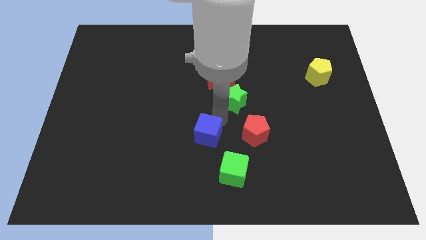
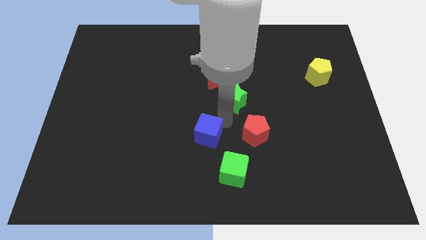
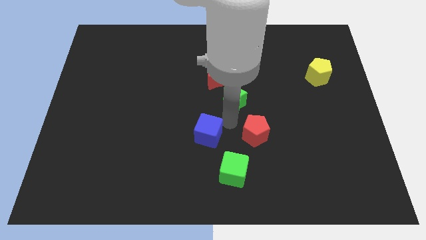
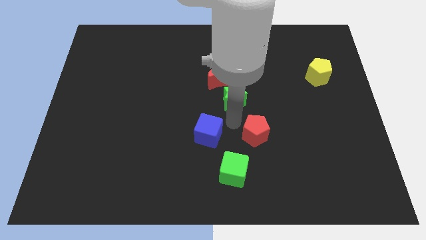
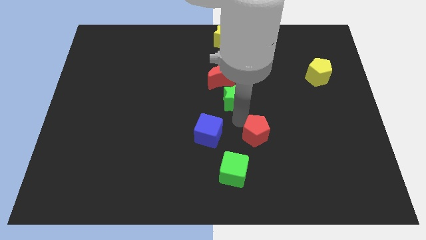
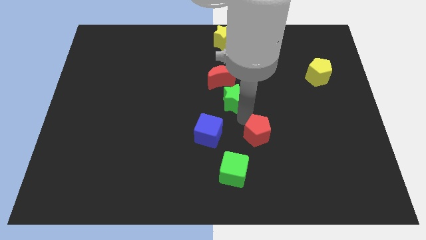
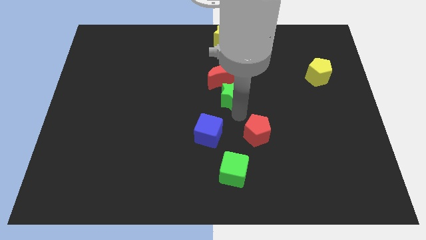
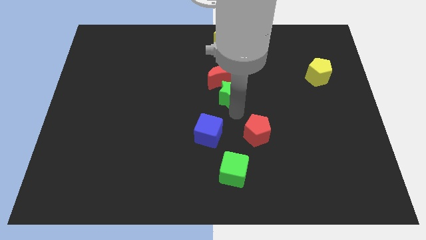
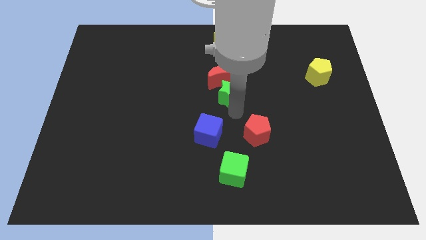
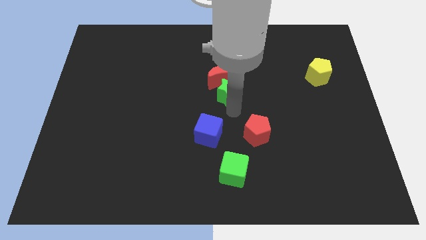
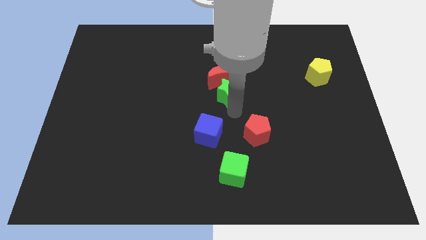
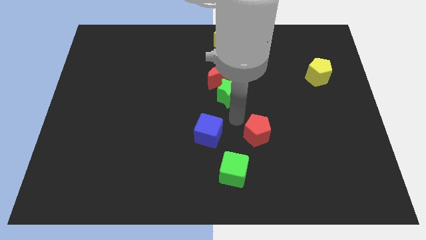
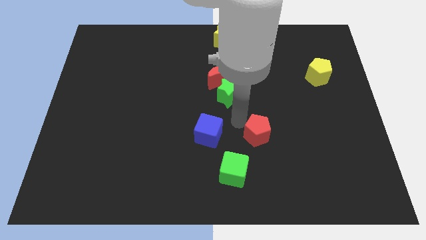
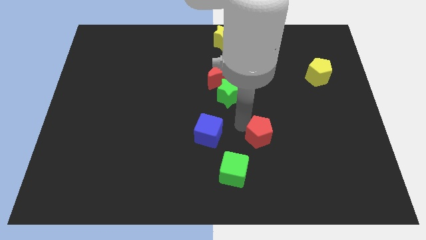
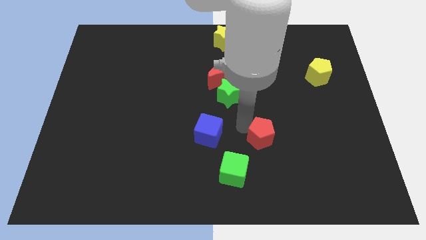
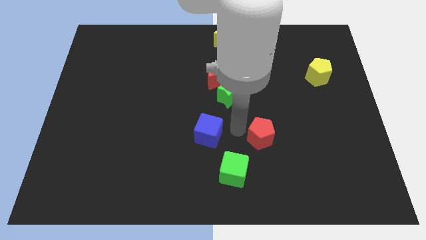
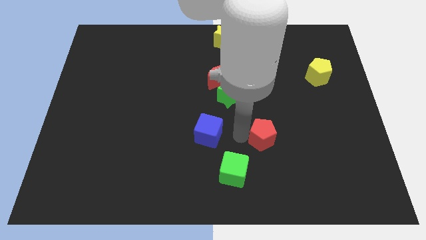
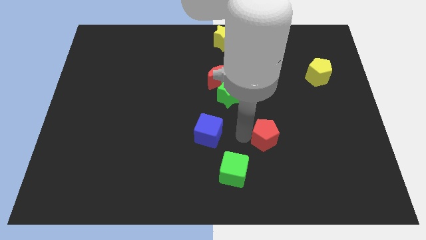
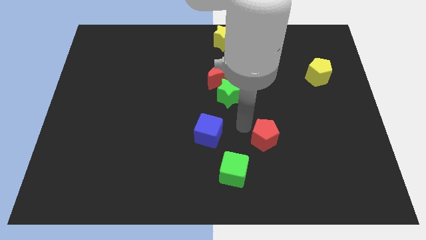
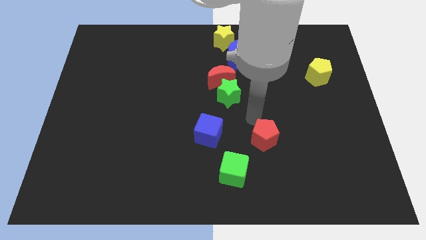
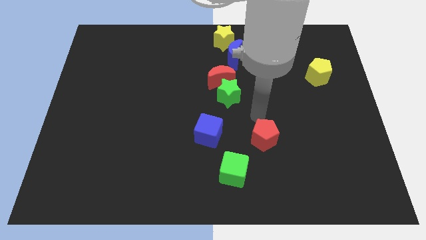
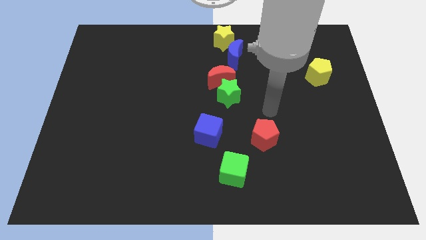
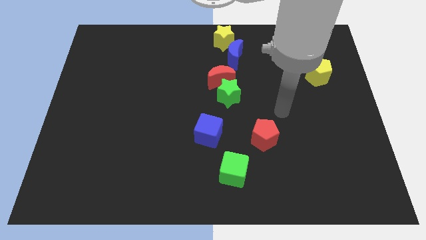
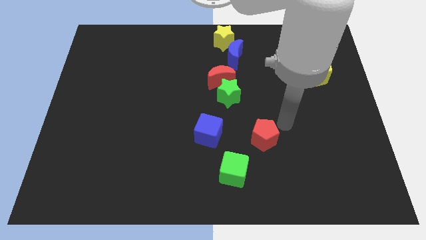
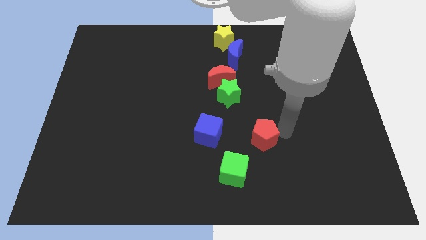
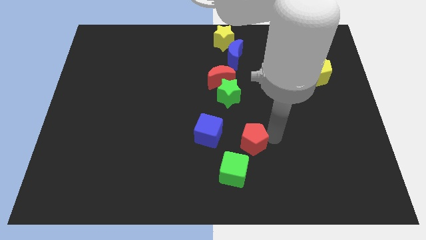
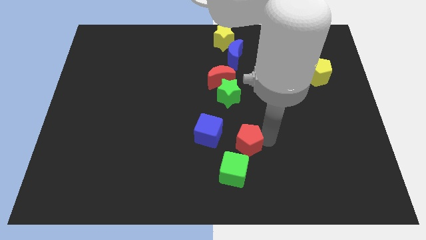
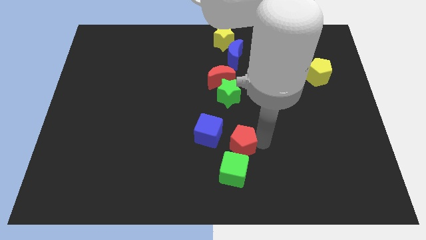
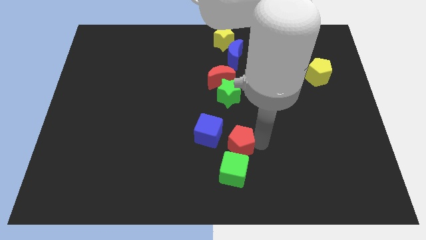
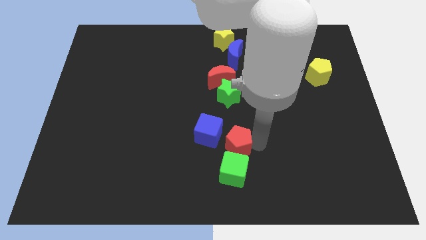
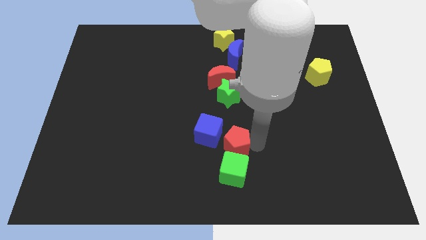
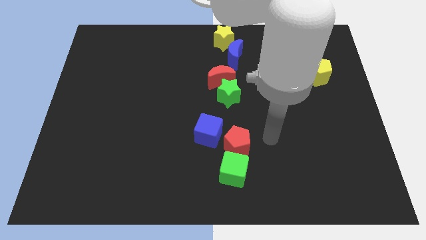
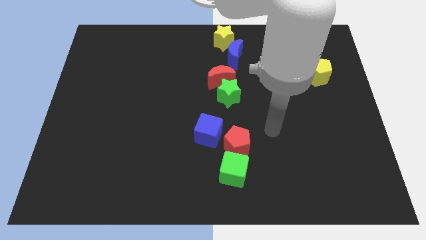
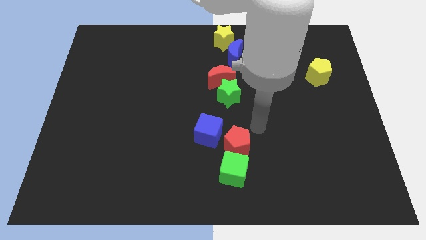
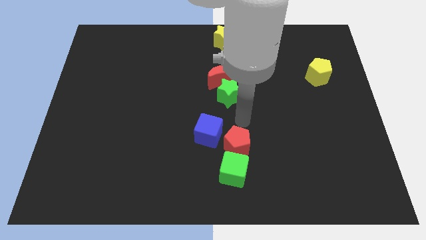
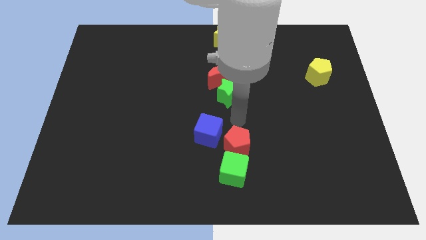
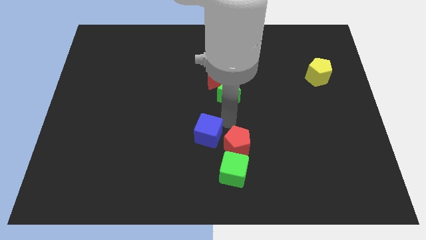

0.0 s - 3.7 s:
separate green star and red pentagon

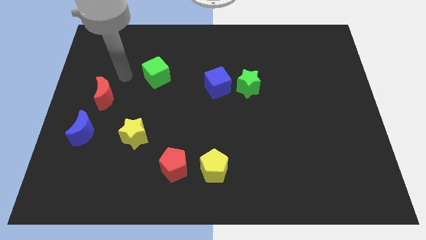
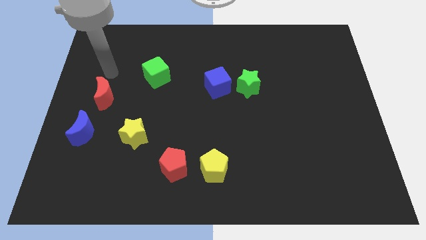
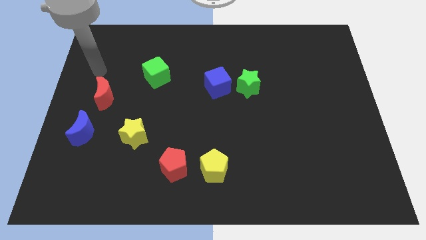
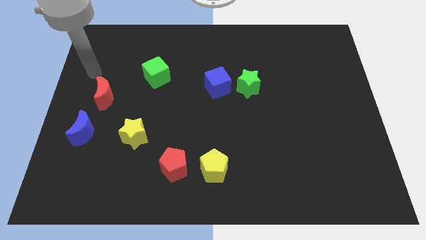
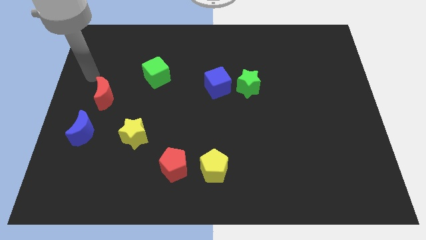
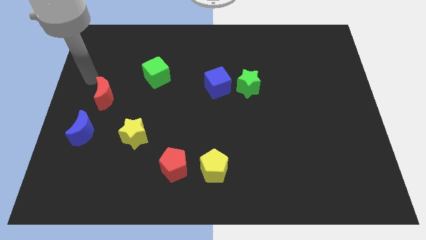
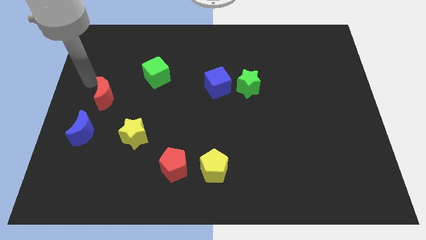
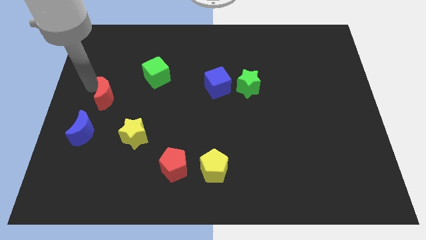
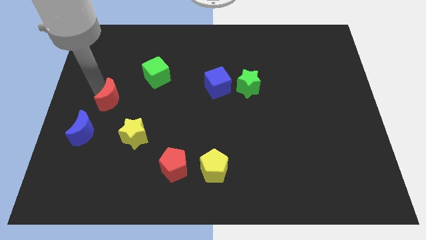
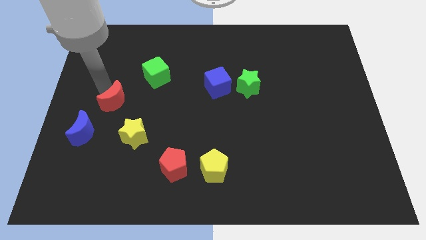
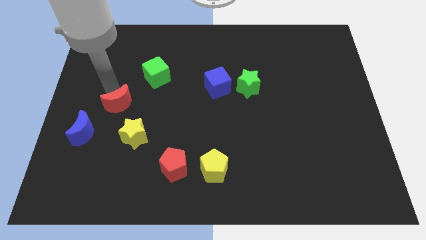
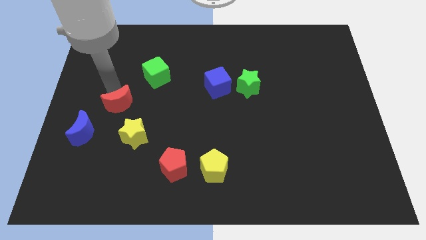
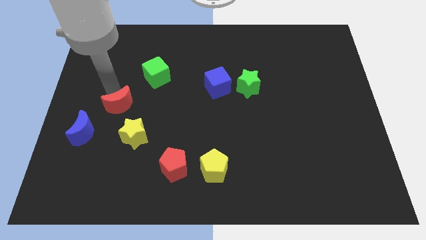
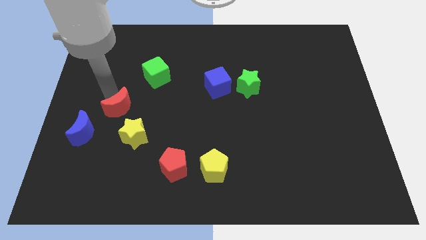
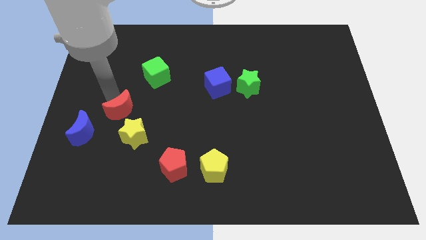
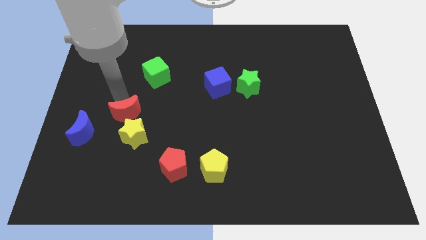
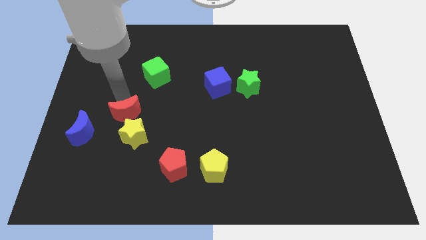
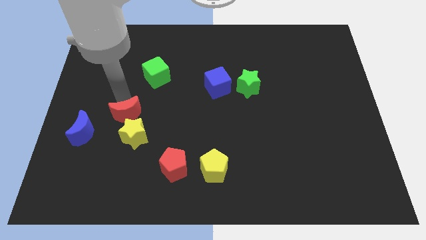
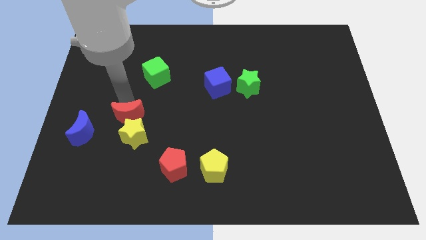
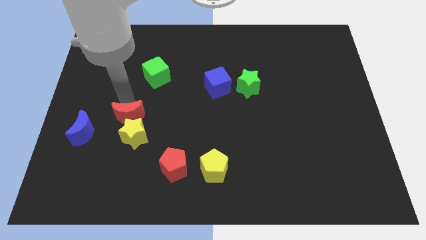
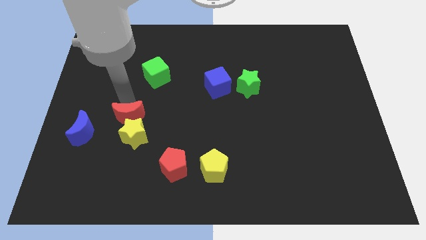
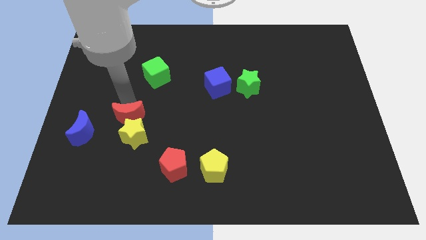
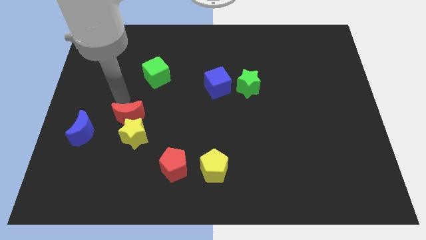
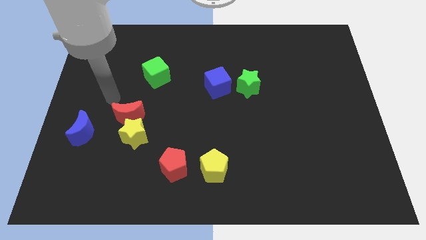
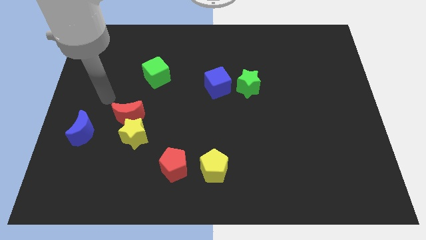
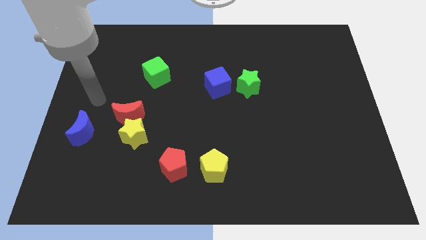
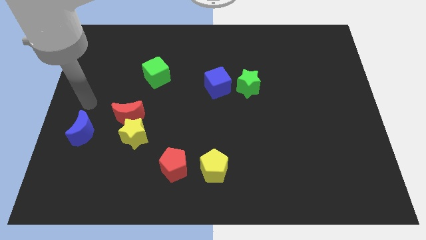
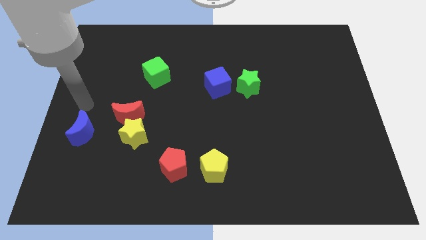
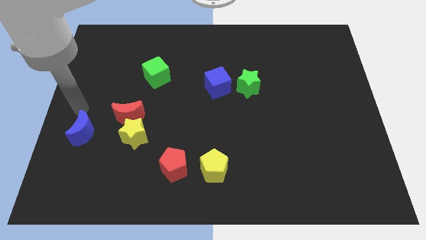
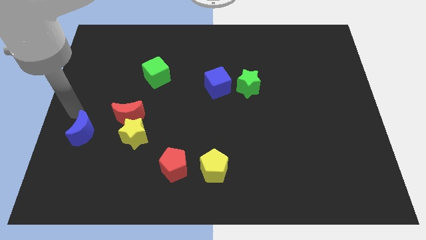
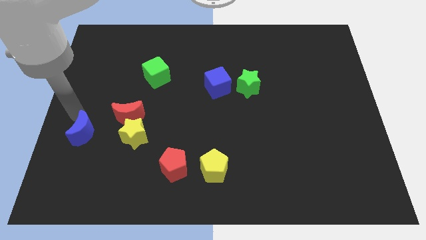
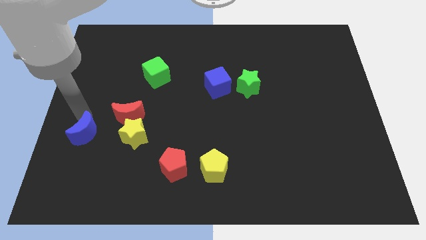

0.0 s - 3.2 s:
move the red moon on the top side of the yellow star

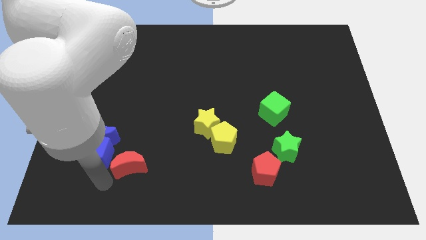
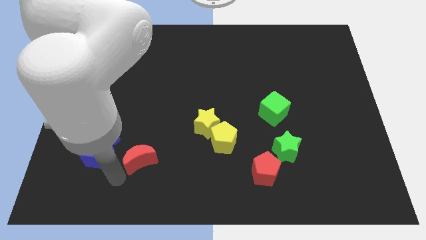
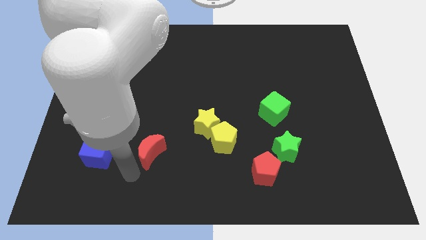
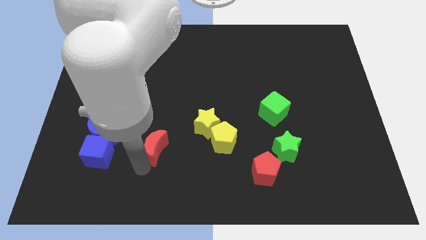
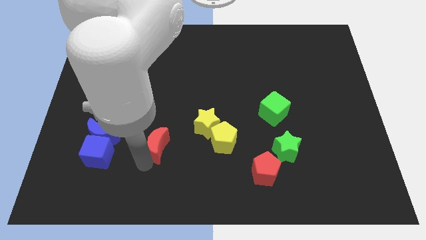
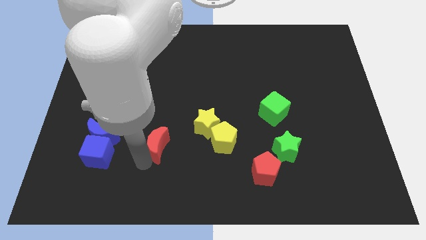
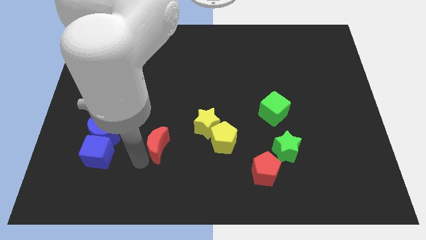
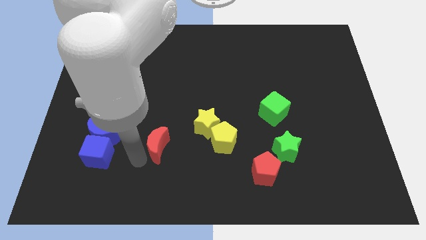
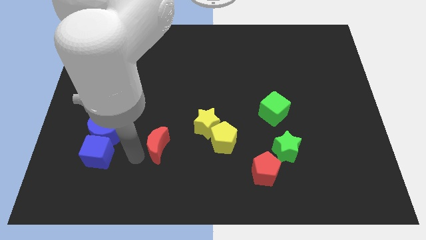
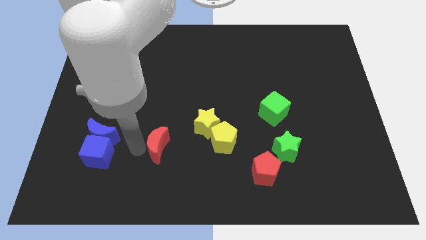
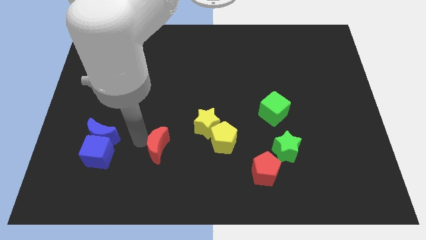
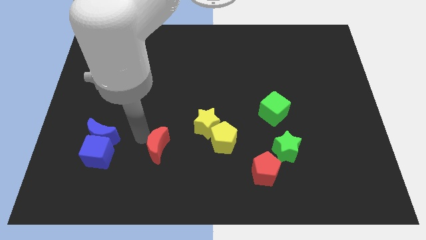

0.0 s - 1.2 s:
push the red crescent in between the blue cube and yellow pentagon

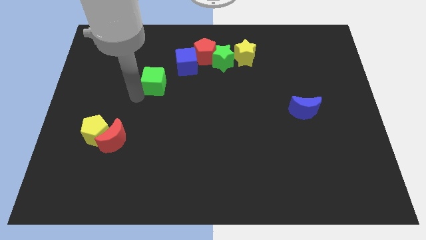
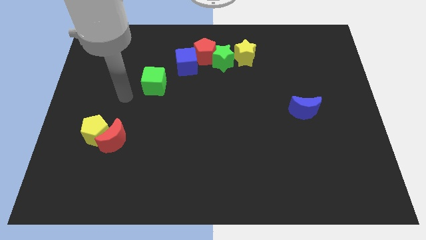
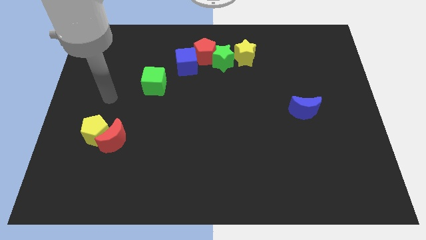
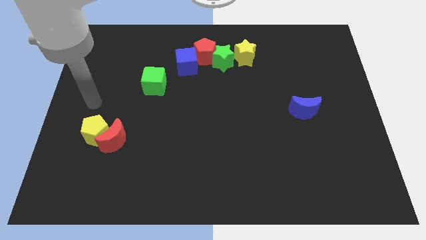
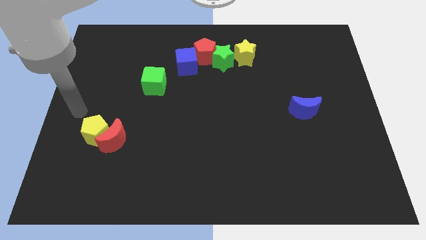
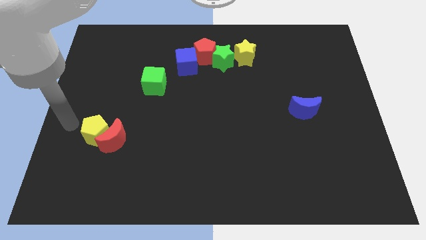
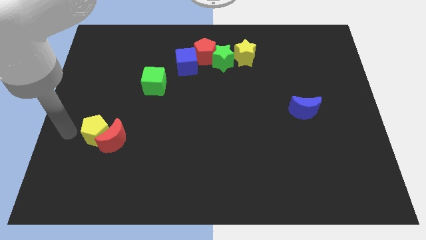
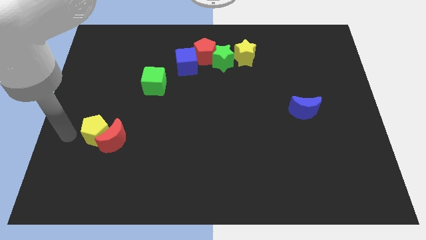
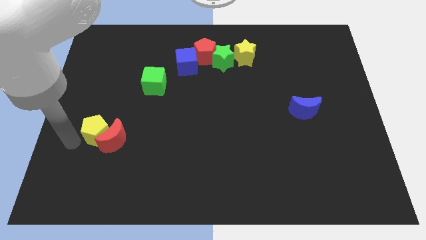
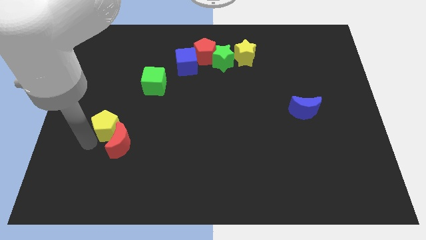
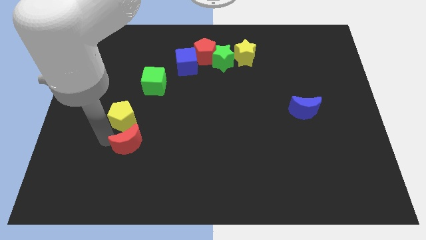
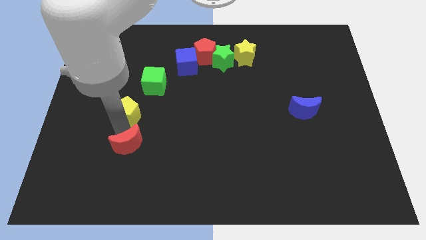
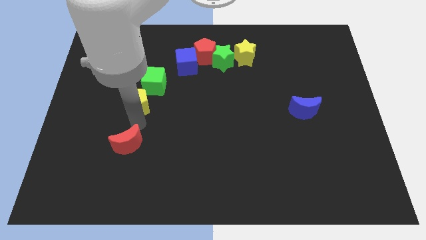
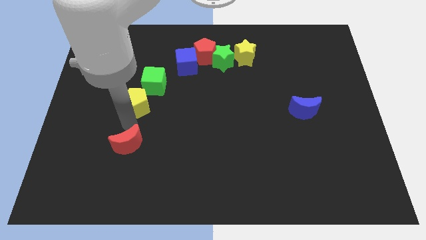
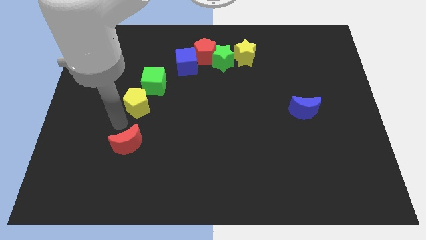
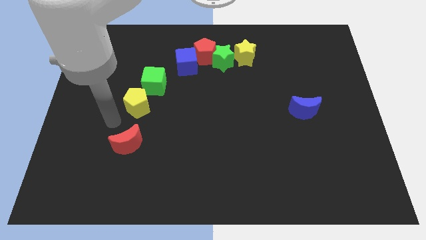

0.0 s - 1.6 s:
separate the yellow pentagon from red moon
